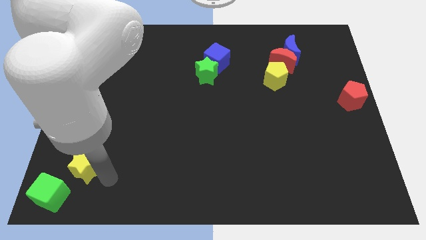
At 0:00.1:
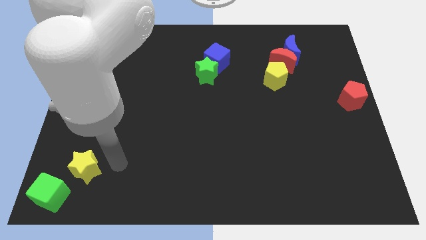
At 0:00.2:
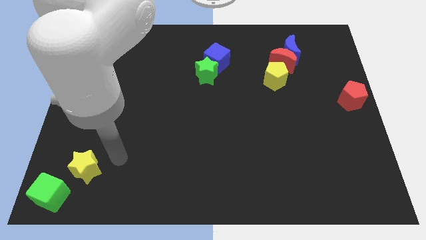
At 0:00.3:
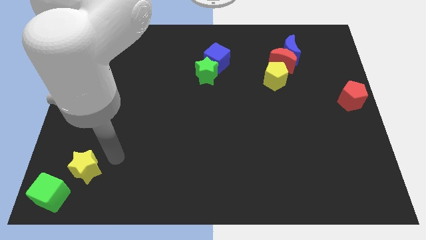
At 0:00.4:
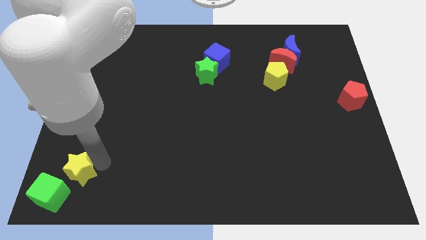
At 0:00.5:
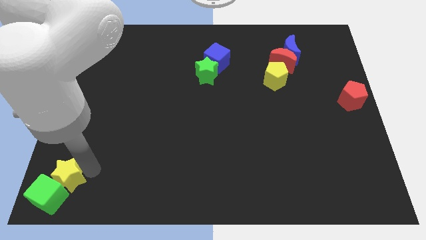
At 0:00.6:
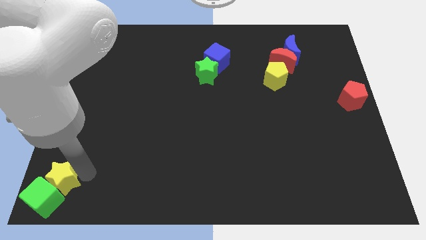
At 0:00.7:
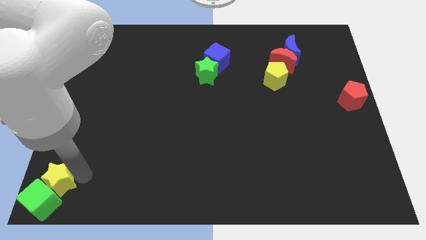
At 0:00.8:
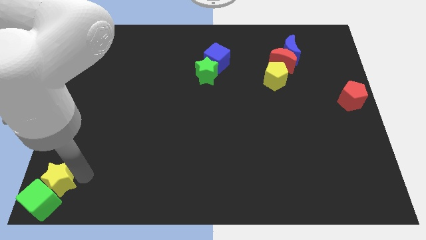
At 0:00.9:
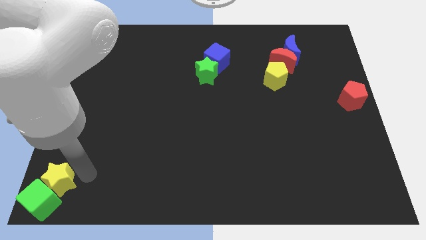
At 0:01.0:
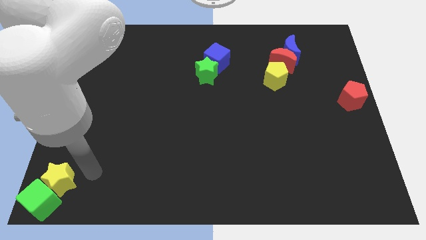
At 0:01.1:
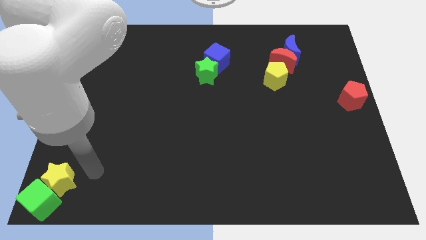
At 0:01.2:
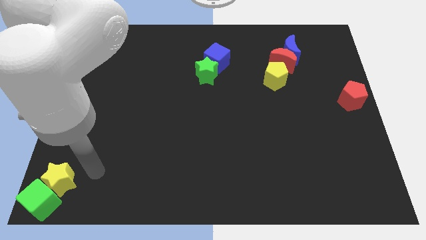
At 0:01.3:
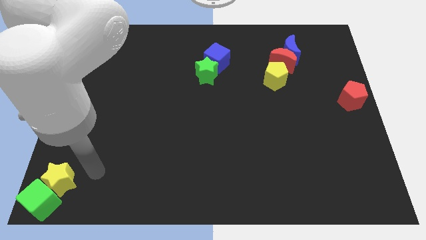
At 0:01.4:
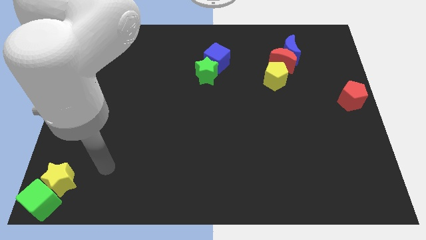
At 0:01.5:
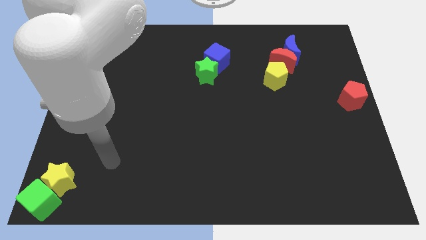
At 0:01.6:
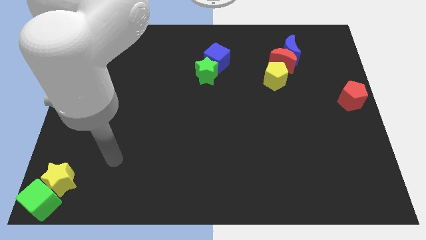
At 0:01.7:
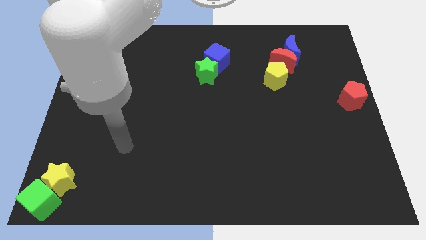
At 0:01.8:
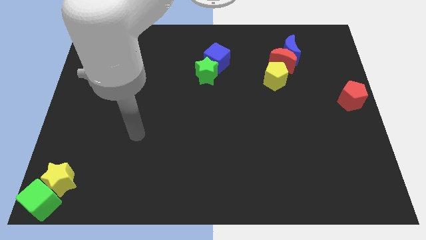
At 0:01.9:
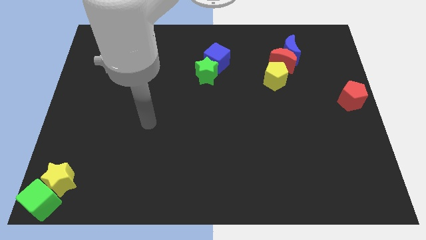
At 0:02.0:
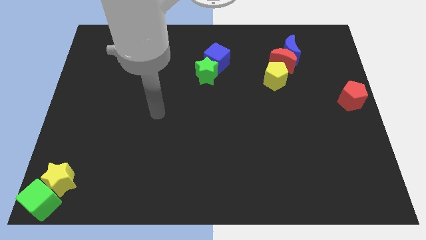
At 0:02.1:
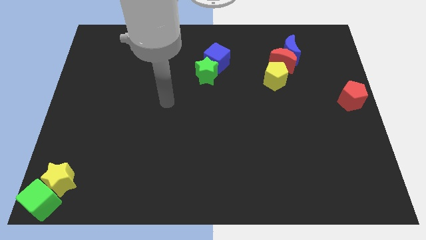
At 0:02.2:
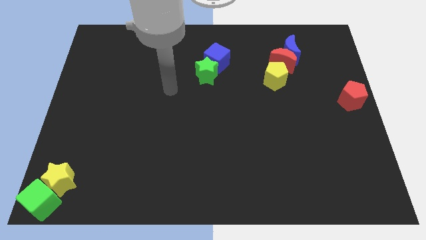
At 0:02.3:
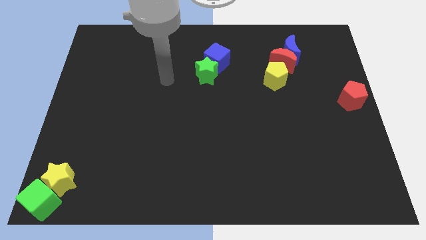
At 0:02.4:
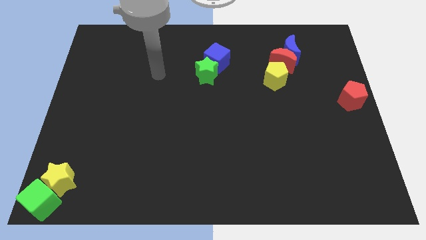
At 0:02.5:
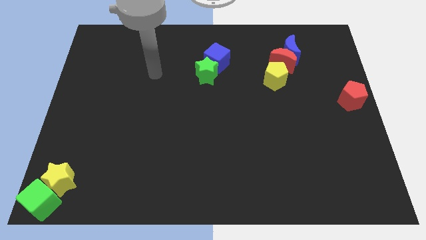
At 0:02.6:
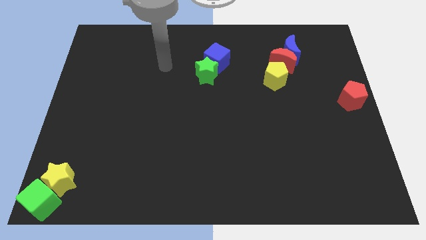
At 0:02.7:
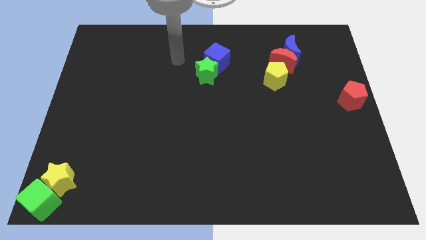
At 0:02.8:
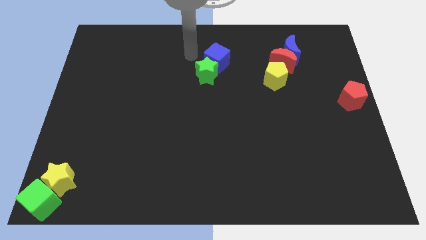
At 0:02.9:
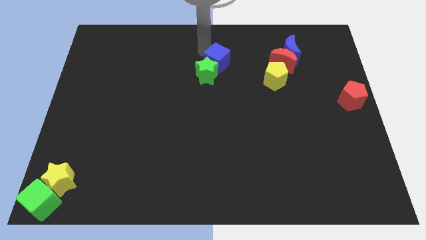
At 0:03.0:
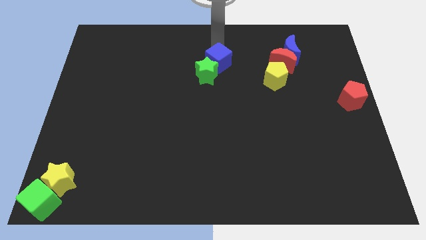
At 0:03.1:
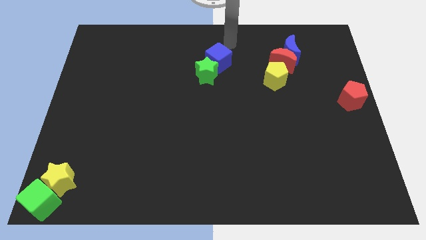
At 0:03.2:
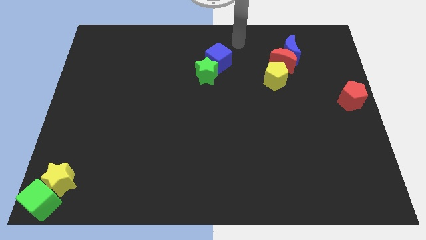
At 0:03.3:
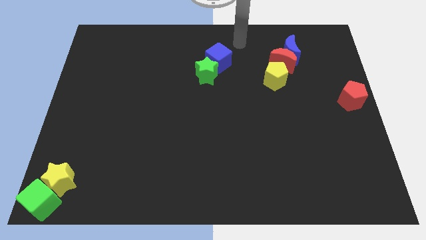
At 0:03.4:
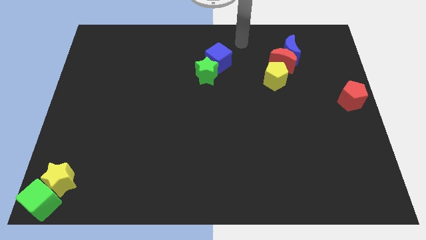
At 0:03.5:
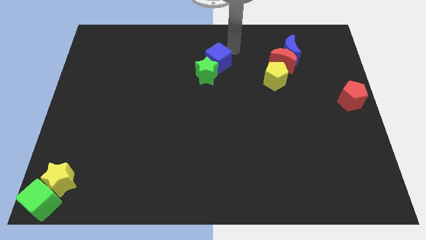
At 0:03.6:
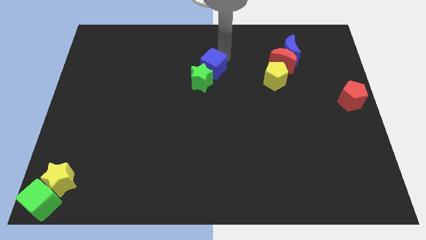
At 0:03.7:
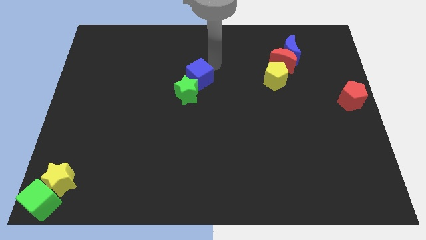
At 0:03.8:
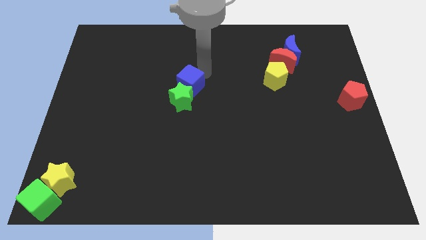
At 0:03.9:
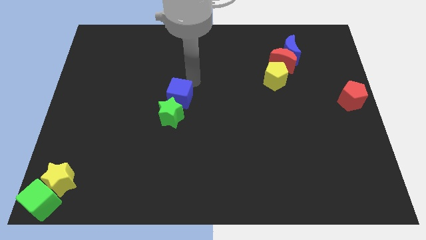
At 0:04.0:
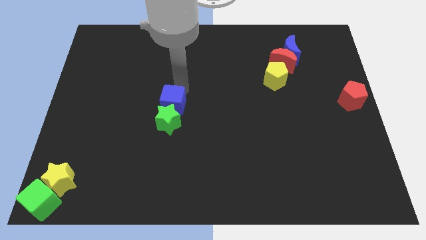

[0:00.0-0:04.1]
push the blue cube into the green star

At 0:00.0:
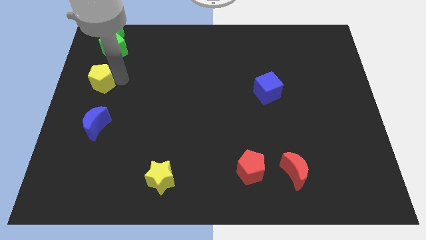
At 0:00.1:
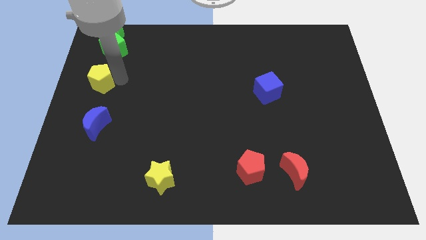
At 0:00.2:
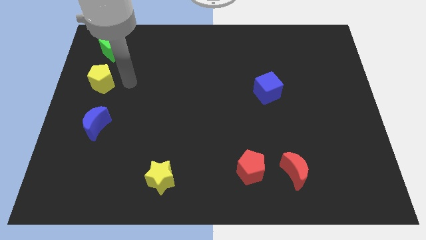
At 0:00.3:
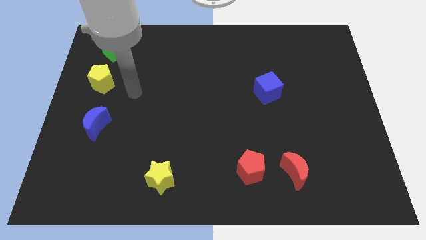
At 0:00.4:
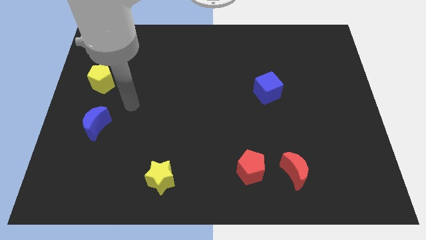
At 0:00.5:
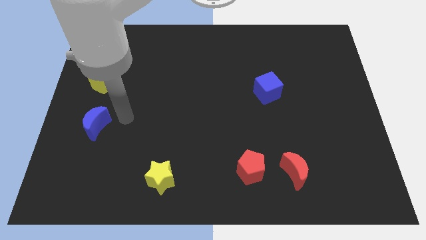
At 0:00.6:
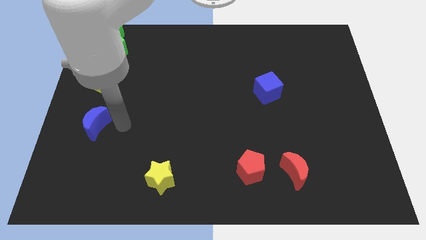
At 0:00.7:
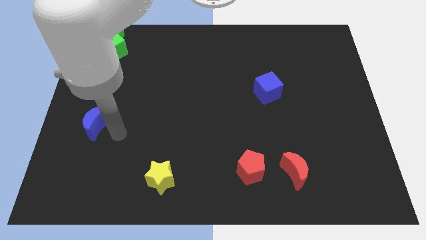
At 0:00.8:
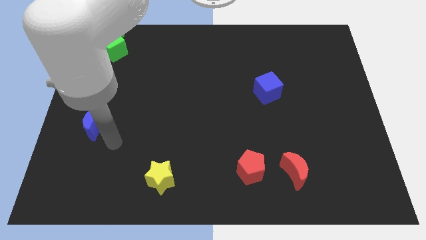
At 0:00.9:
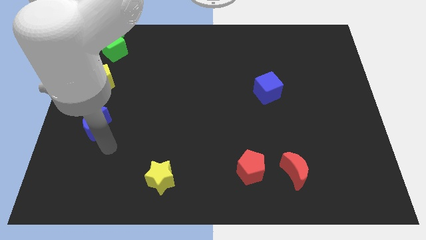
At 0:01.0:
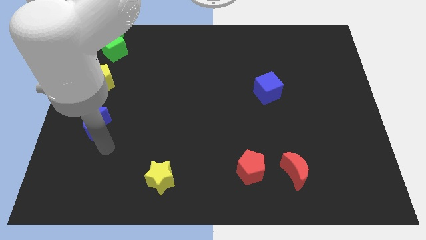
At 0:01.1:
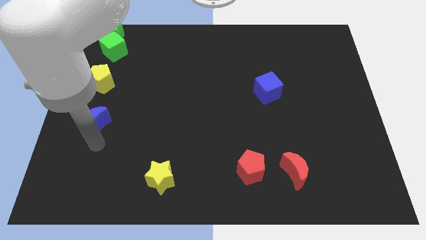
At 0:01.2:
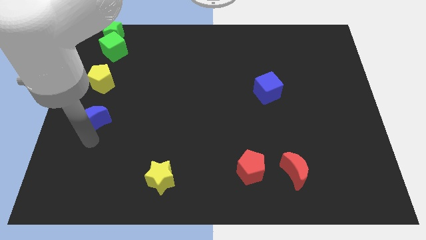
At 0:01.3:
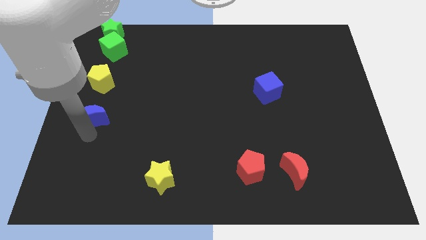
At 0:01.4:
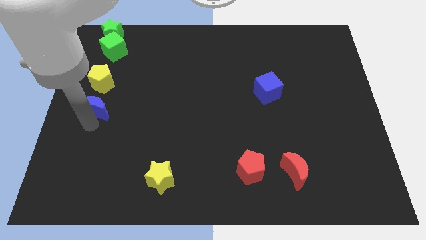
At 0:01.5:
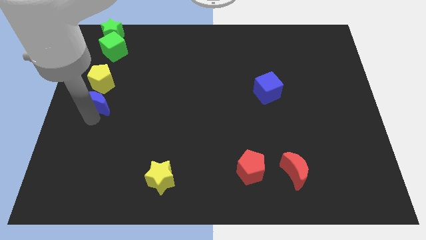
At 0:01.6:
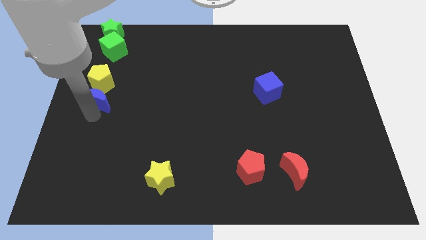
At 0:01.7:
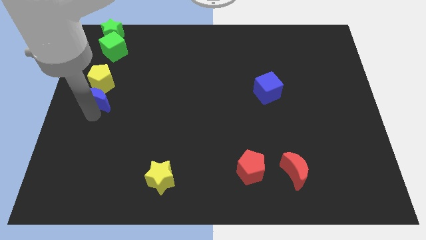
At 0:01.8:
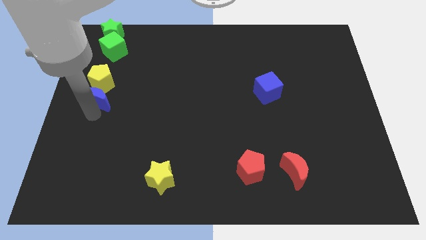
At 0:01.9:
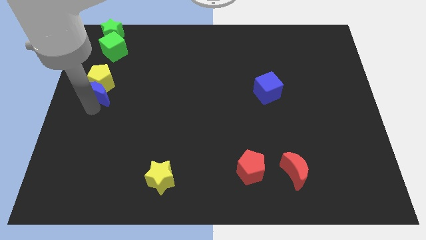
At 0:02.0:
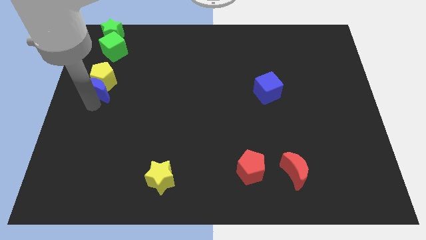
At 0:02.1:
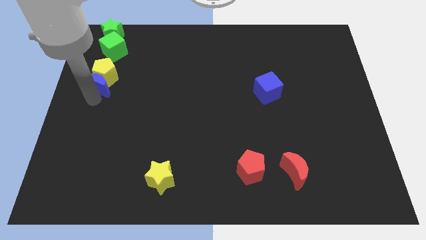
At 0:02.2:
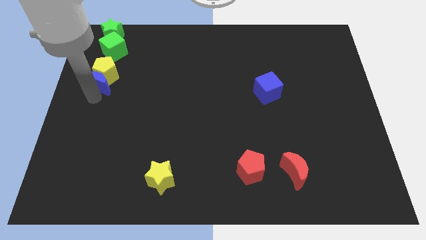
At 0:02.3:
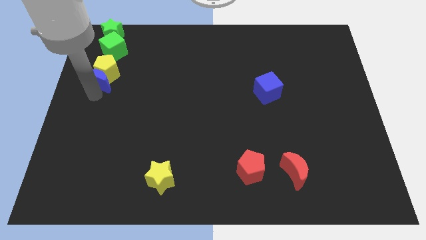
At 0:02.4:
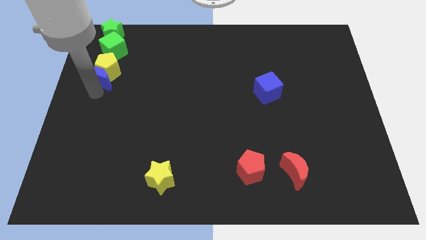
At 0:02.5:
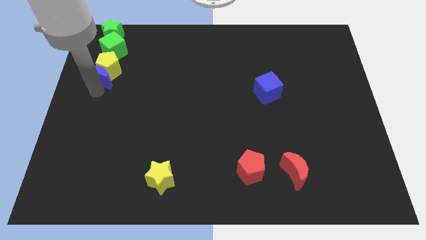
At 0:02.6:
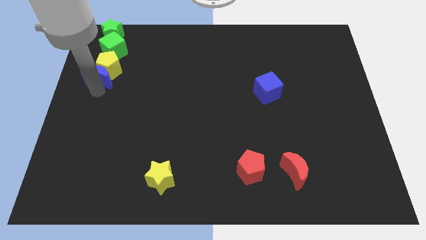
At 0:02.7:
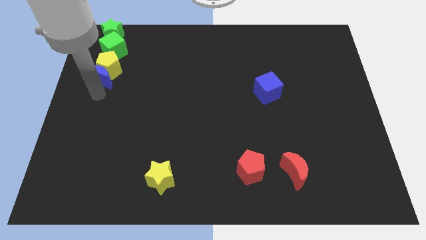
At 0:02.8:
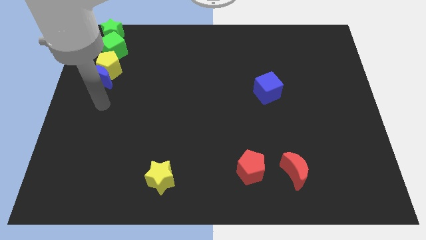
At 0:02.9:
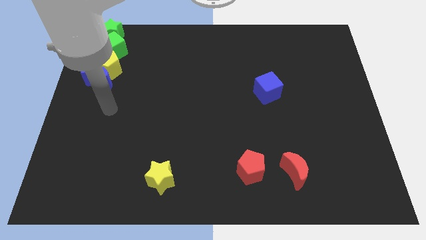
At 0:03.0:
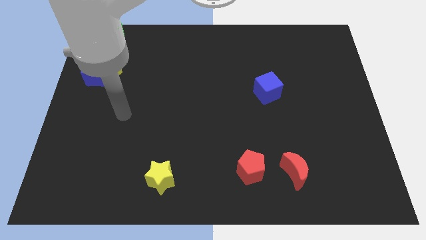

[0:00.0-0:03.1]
drag the yellow pentagon and blue crescent into the bottom side of the green cube

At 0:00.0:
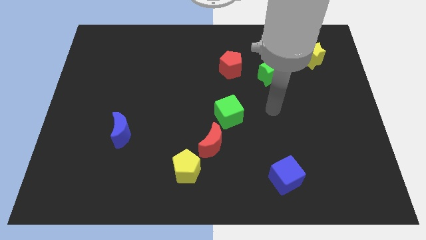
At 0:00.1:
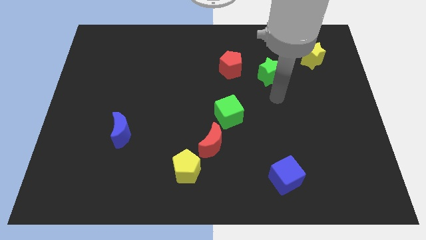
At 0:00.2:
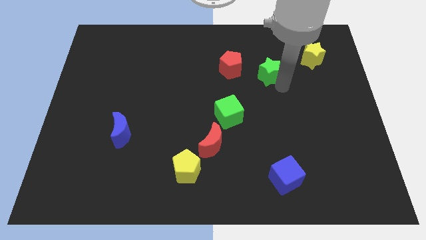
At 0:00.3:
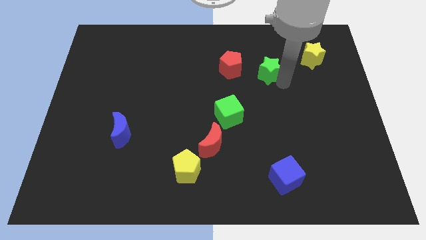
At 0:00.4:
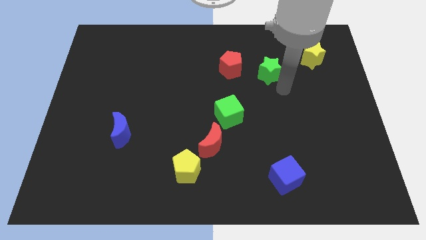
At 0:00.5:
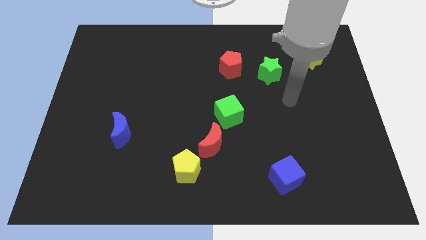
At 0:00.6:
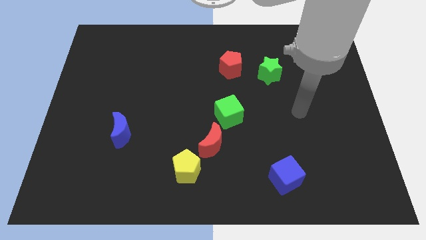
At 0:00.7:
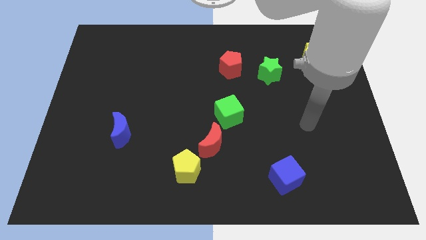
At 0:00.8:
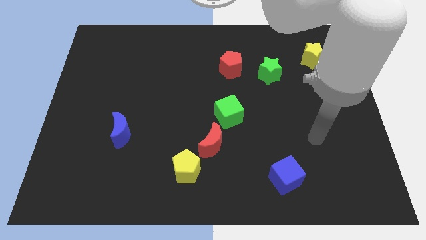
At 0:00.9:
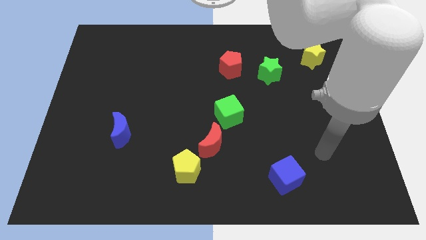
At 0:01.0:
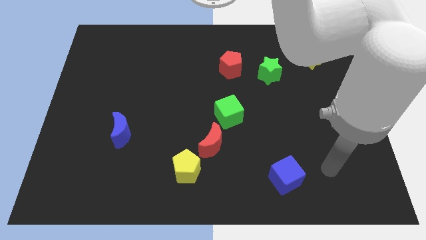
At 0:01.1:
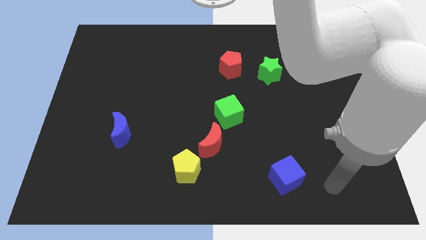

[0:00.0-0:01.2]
touch the green star

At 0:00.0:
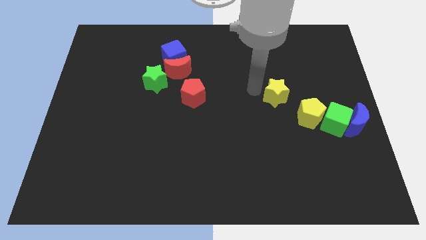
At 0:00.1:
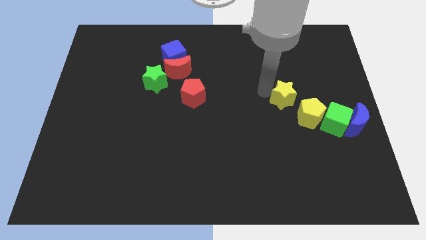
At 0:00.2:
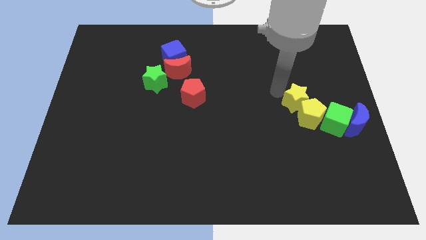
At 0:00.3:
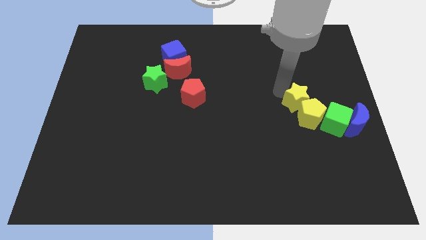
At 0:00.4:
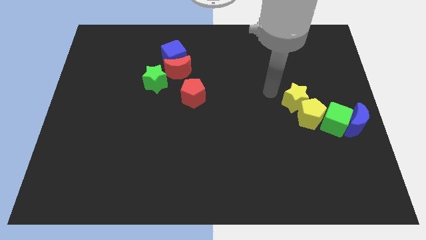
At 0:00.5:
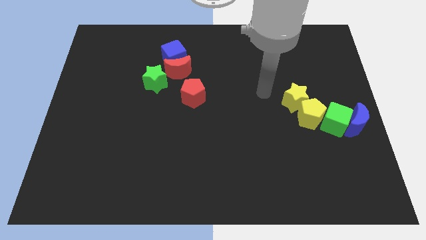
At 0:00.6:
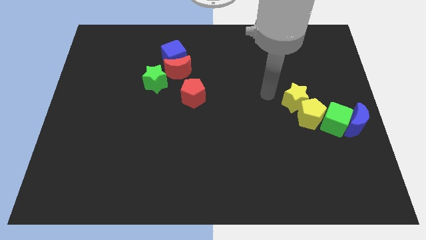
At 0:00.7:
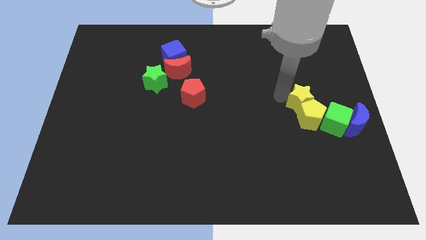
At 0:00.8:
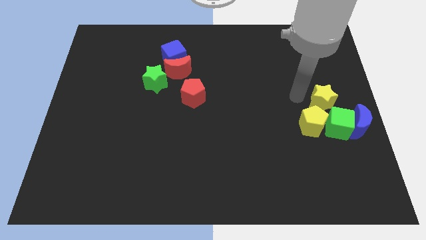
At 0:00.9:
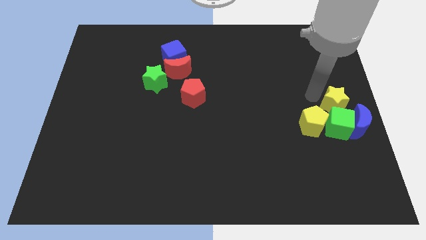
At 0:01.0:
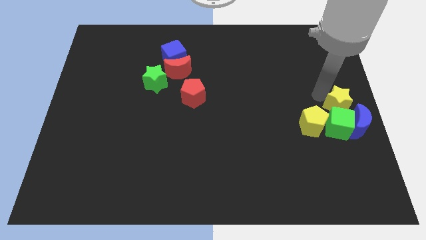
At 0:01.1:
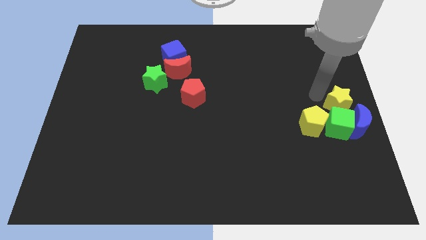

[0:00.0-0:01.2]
push the yellow star into the group of blocks
